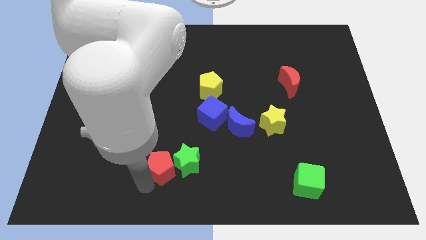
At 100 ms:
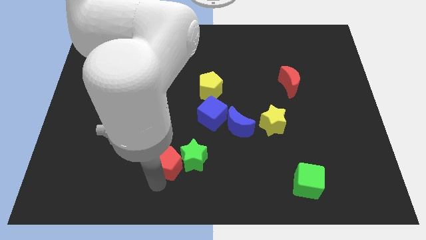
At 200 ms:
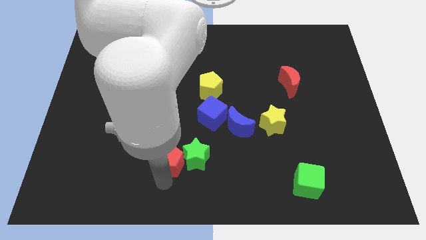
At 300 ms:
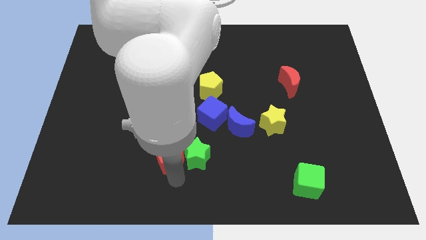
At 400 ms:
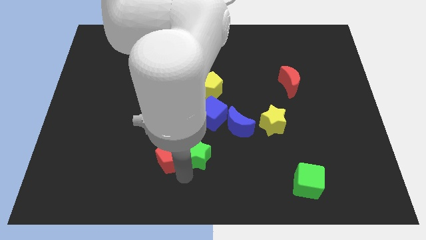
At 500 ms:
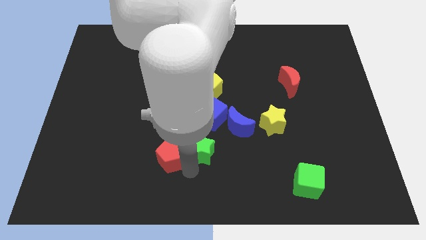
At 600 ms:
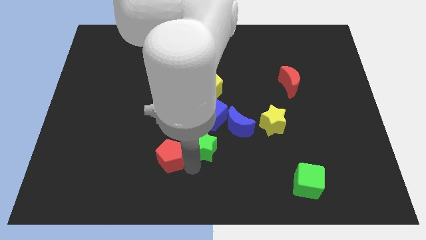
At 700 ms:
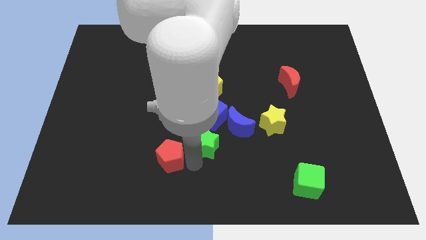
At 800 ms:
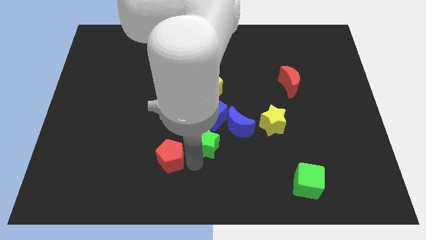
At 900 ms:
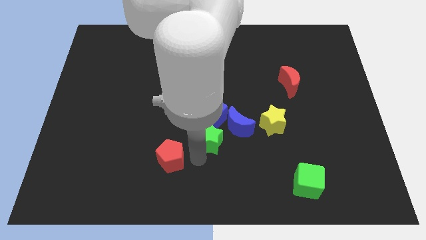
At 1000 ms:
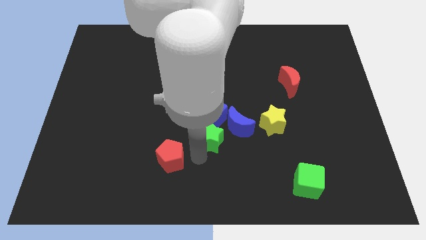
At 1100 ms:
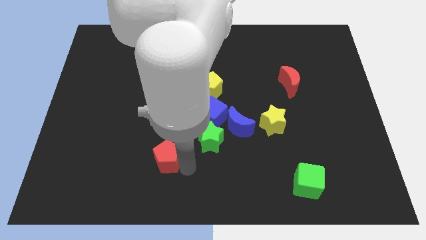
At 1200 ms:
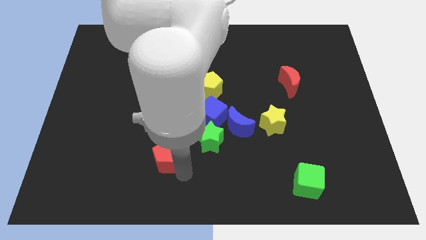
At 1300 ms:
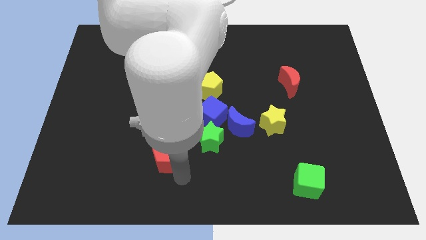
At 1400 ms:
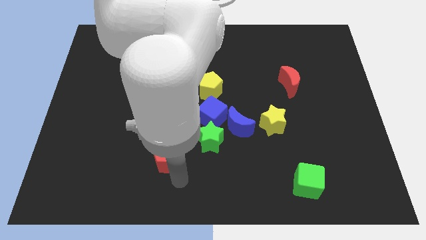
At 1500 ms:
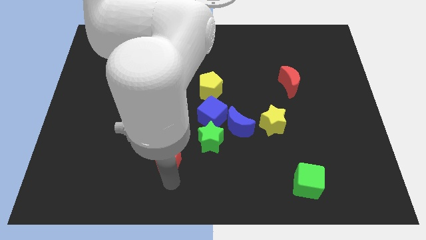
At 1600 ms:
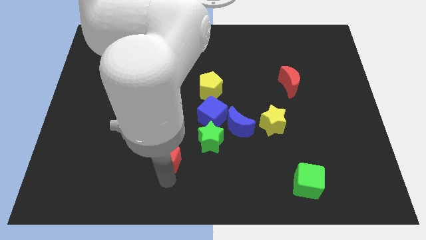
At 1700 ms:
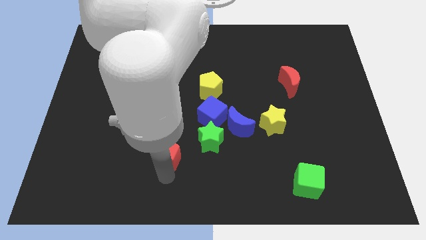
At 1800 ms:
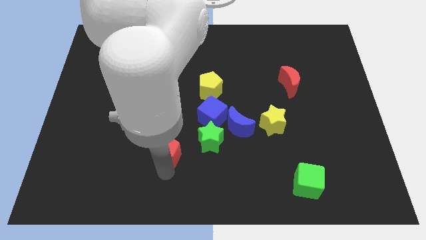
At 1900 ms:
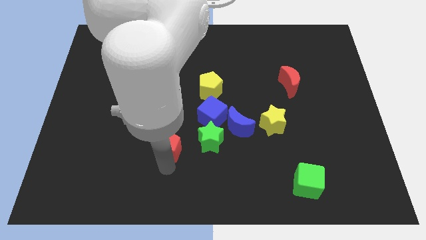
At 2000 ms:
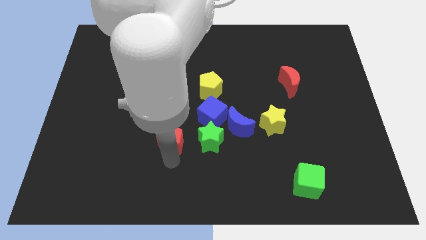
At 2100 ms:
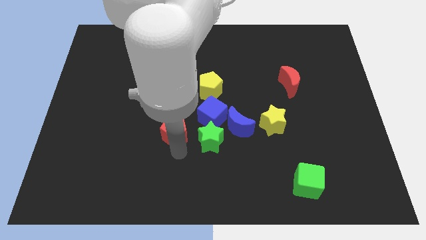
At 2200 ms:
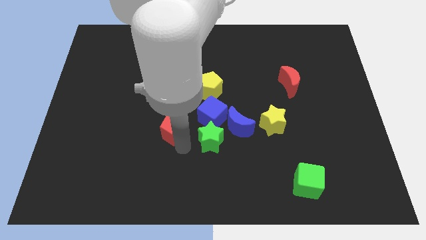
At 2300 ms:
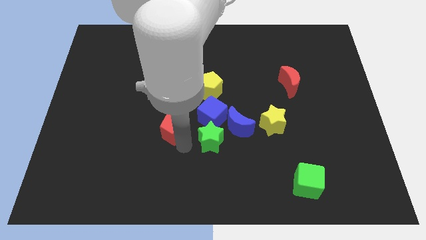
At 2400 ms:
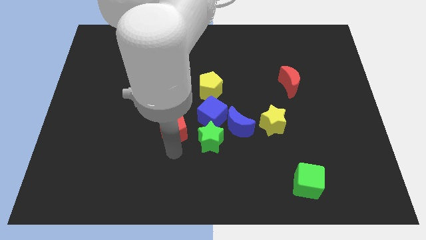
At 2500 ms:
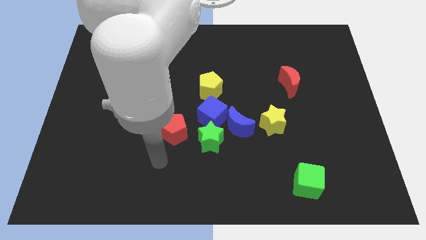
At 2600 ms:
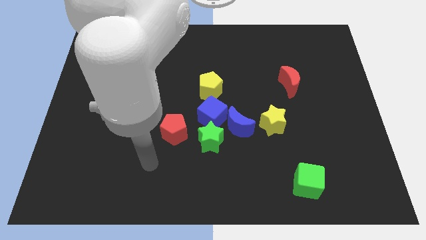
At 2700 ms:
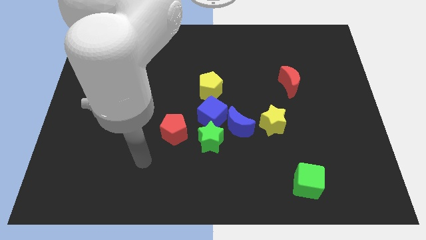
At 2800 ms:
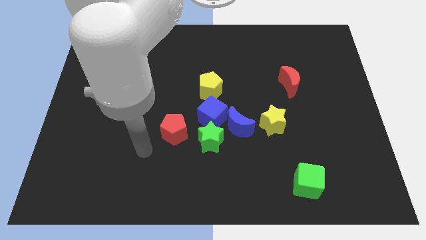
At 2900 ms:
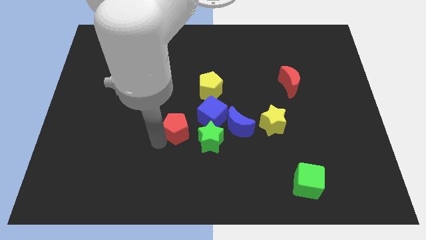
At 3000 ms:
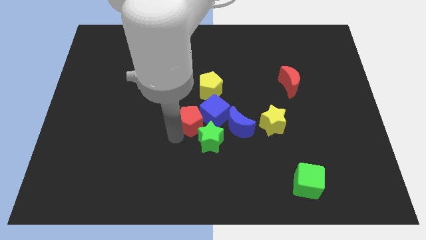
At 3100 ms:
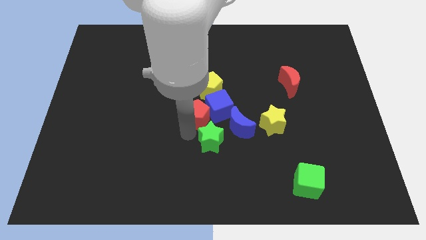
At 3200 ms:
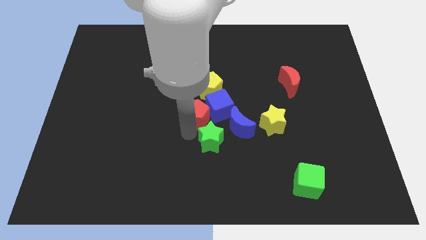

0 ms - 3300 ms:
place red pentagon near to blue cube

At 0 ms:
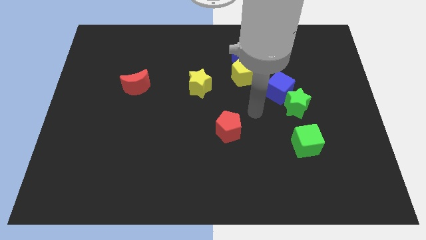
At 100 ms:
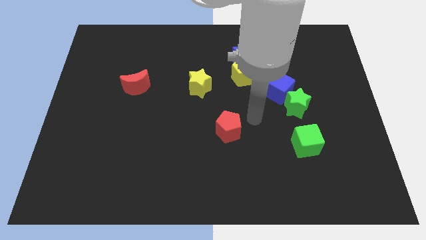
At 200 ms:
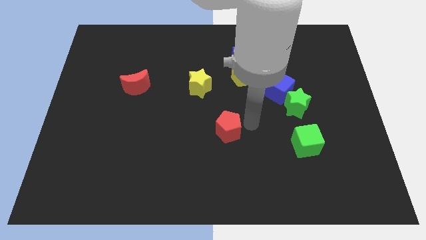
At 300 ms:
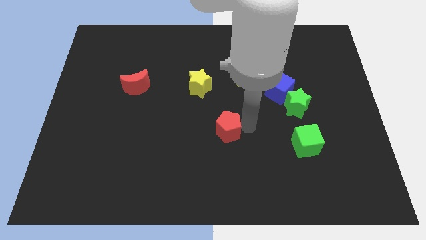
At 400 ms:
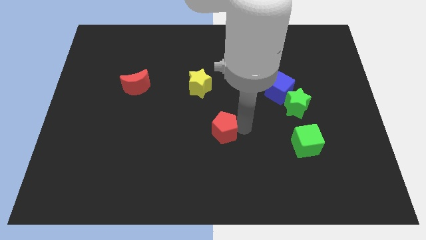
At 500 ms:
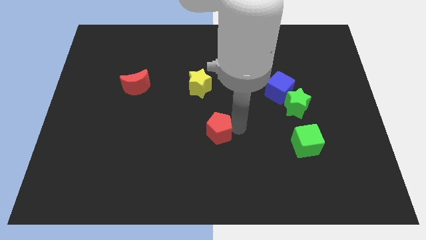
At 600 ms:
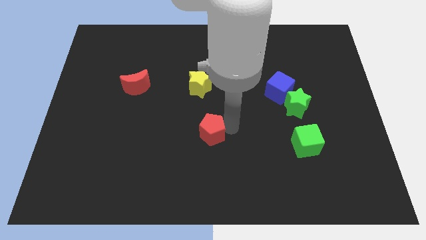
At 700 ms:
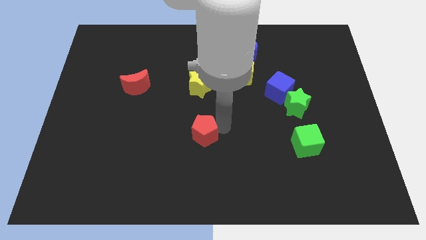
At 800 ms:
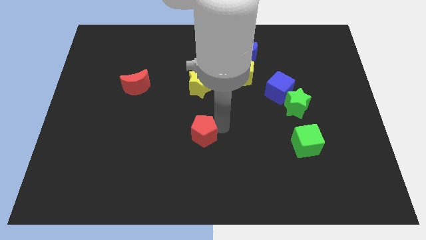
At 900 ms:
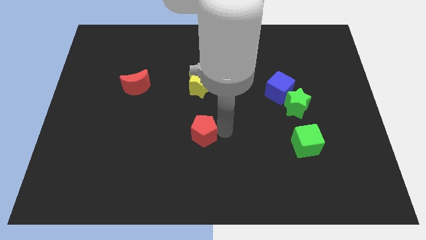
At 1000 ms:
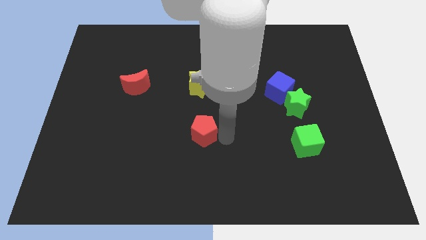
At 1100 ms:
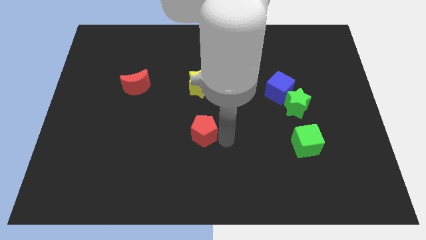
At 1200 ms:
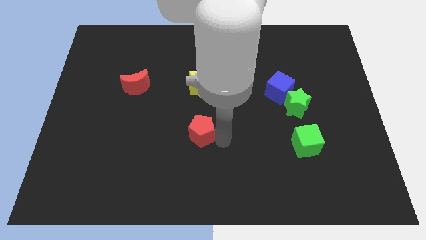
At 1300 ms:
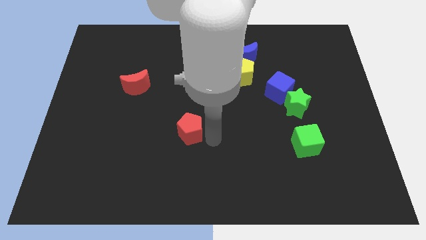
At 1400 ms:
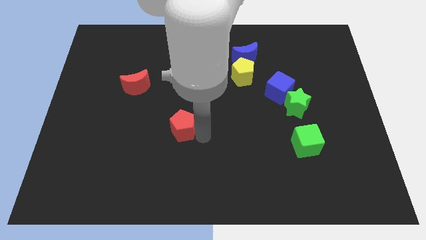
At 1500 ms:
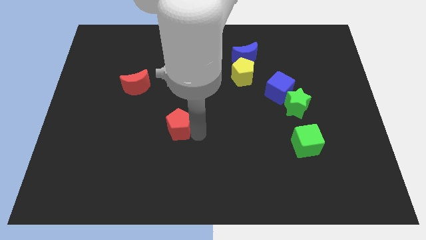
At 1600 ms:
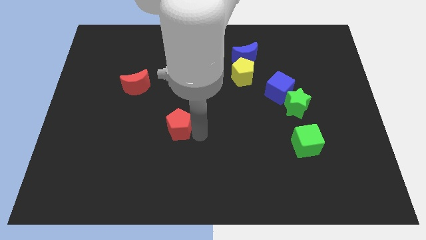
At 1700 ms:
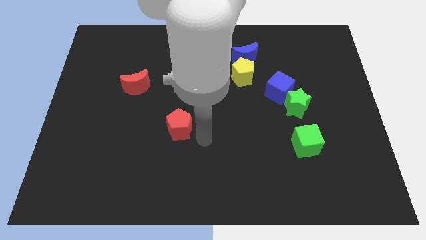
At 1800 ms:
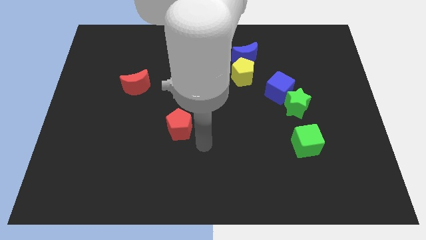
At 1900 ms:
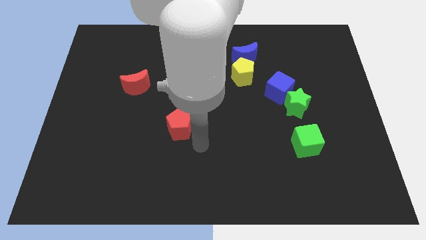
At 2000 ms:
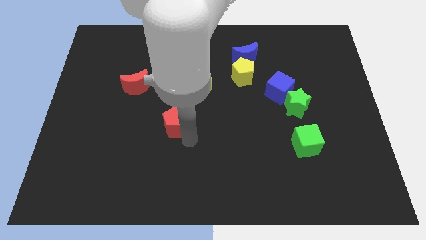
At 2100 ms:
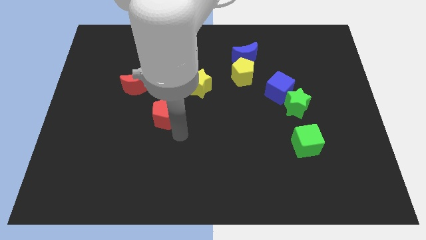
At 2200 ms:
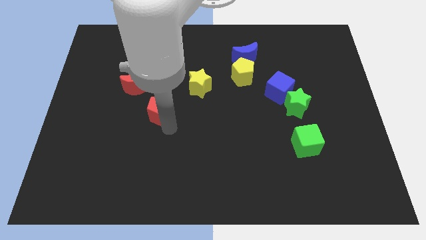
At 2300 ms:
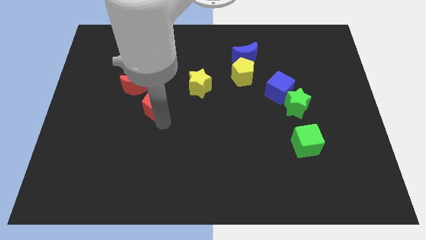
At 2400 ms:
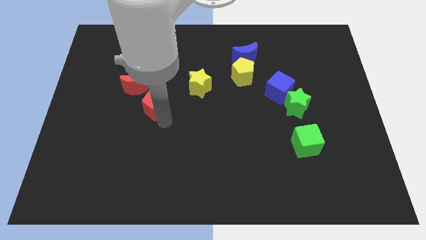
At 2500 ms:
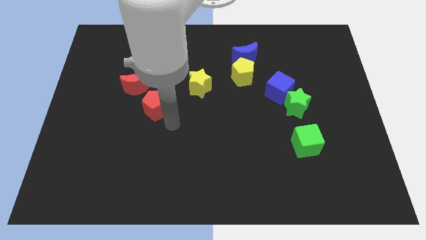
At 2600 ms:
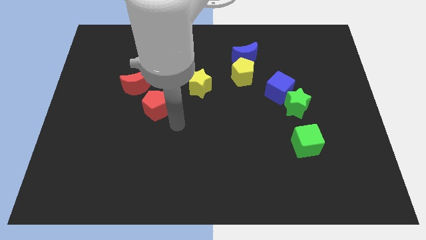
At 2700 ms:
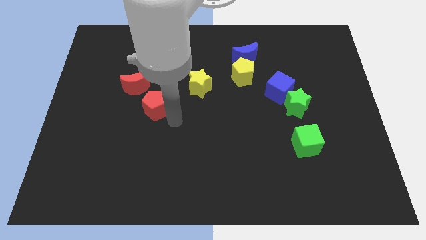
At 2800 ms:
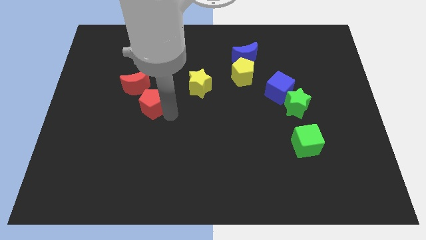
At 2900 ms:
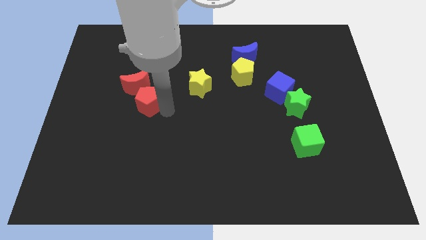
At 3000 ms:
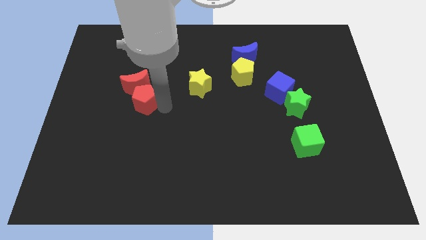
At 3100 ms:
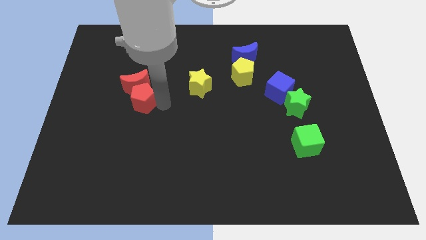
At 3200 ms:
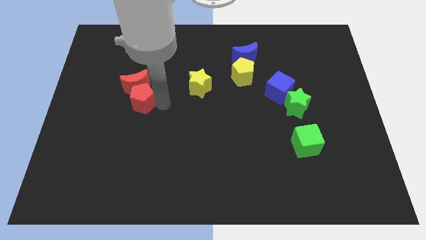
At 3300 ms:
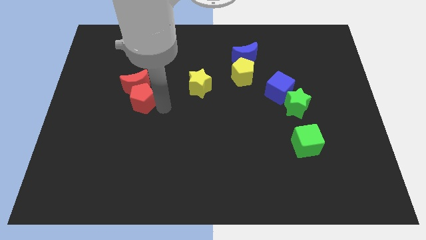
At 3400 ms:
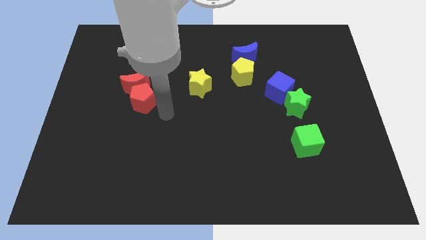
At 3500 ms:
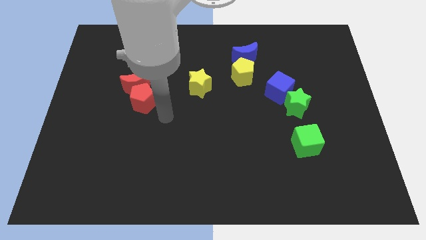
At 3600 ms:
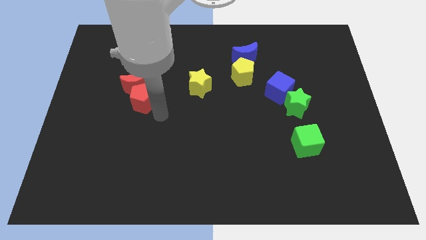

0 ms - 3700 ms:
move the red pentagon close to red moon

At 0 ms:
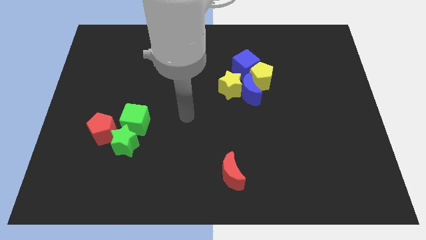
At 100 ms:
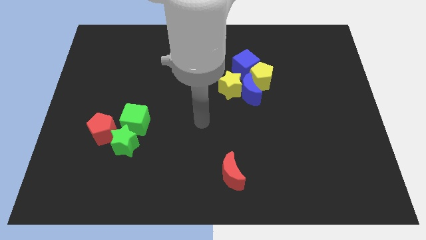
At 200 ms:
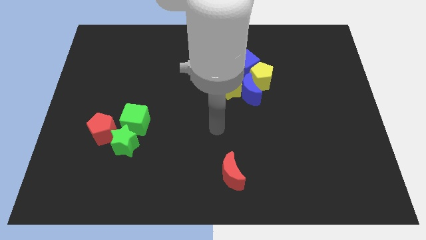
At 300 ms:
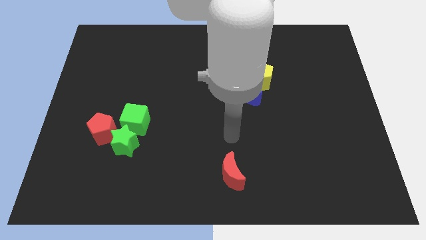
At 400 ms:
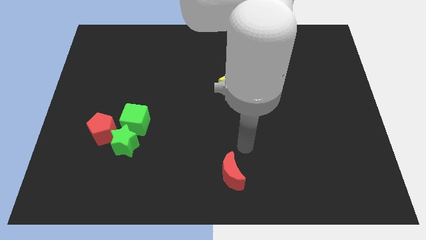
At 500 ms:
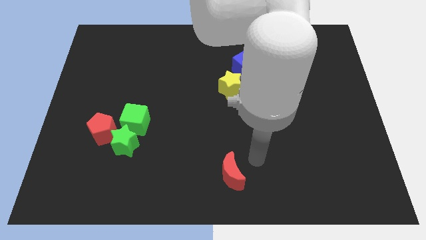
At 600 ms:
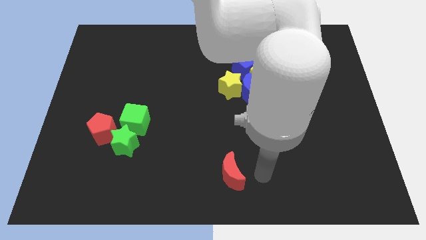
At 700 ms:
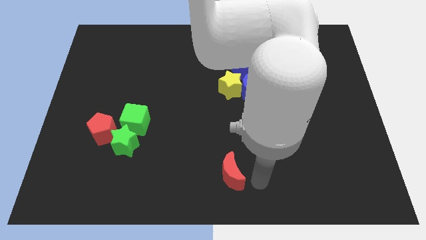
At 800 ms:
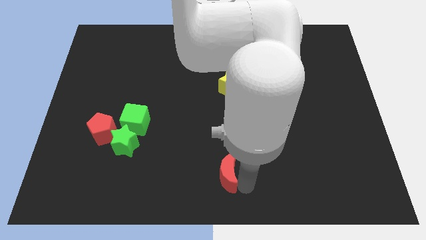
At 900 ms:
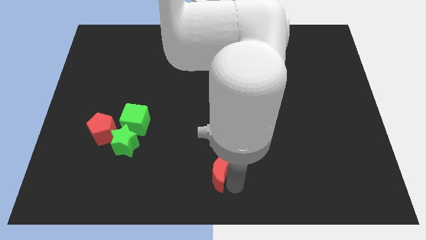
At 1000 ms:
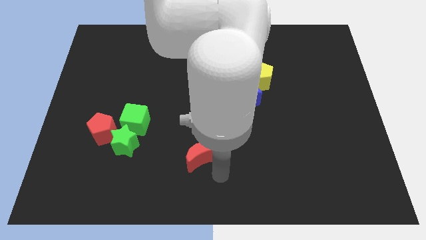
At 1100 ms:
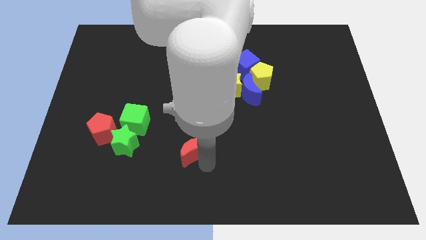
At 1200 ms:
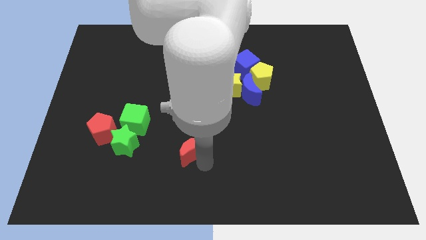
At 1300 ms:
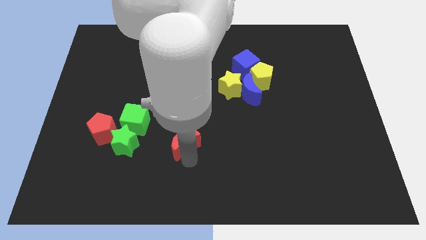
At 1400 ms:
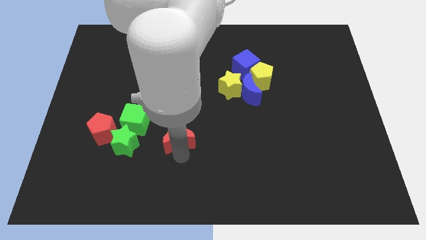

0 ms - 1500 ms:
push the red crescent parallel to the right of the green star

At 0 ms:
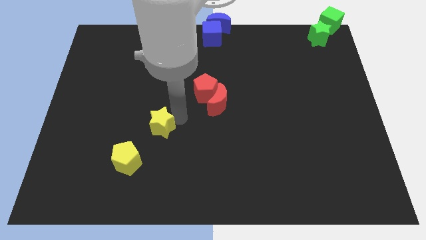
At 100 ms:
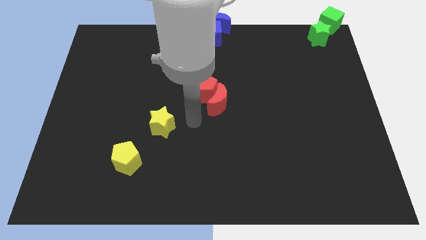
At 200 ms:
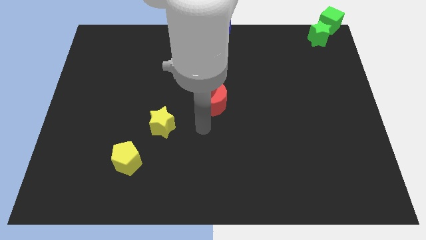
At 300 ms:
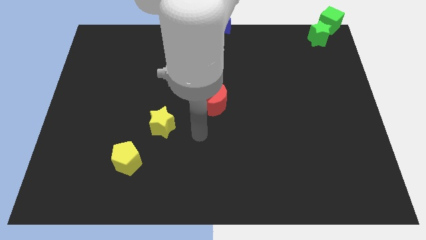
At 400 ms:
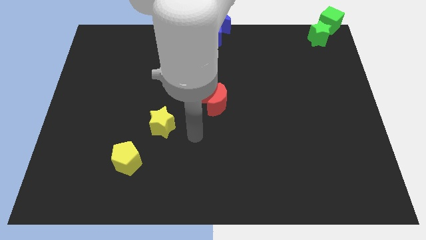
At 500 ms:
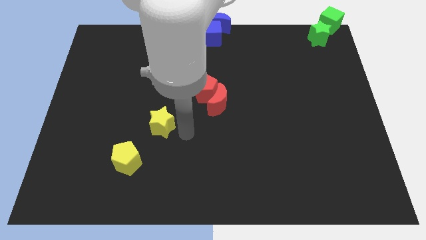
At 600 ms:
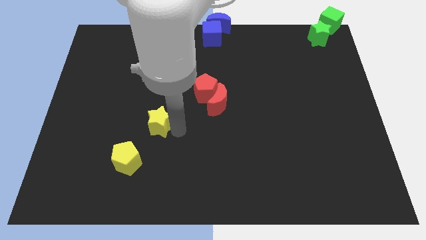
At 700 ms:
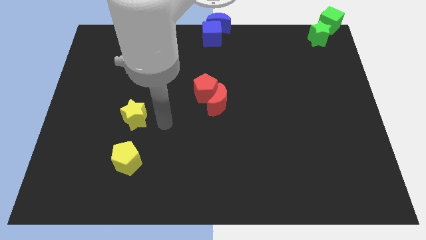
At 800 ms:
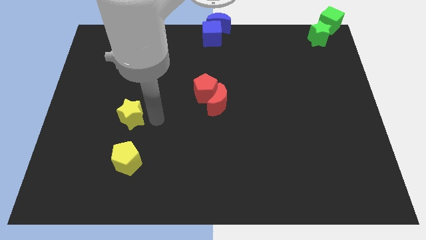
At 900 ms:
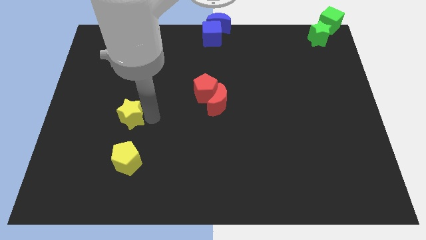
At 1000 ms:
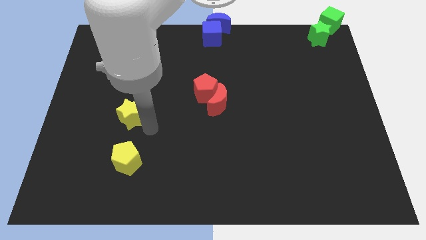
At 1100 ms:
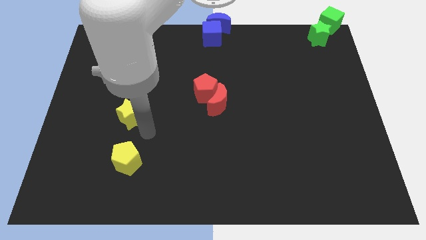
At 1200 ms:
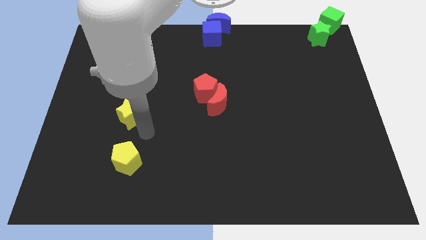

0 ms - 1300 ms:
place the yellow star above the yellow pentagon
